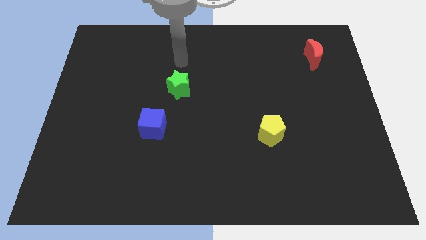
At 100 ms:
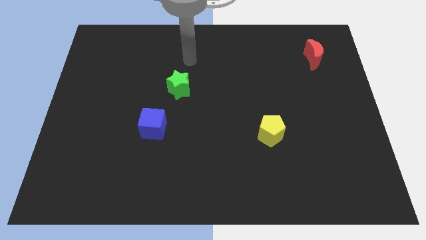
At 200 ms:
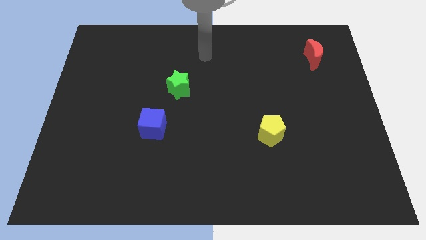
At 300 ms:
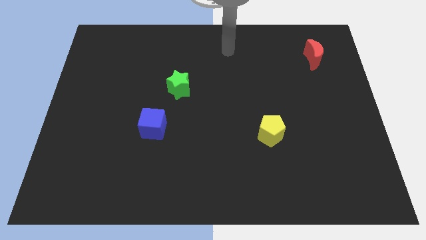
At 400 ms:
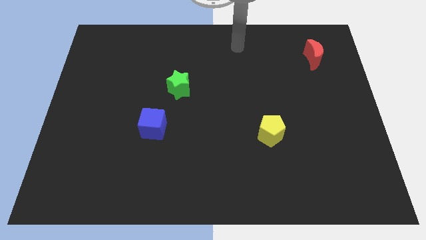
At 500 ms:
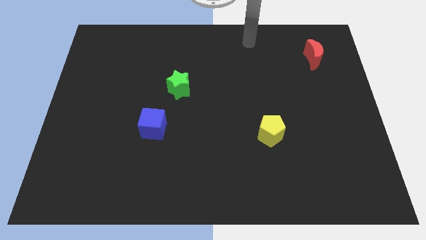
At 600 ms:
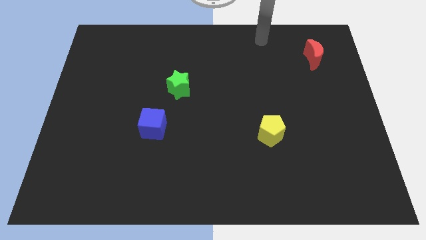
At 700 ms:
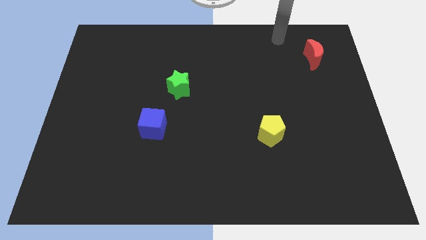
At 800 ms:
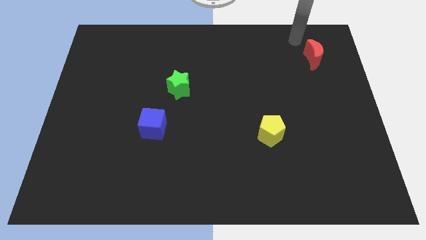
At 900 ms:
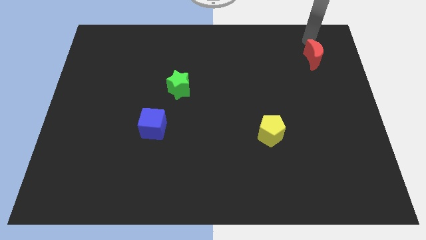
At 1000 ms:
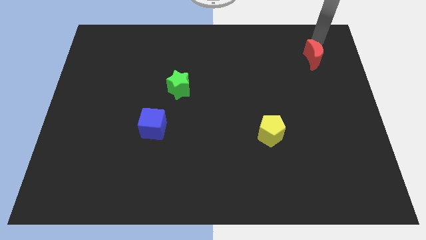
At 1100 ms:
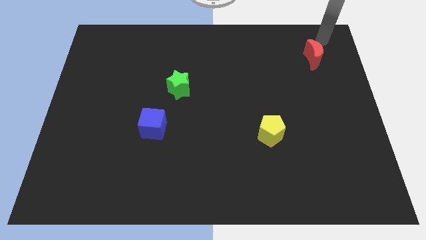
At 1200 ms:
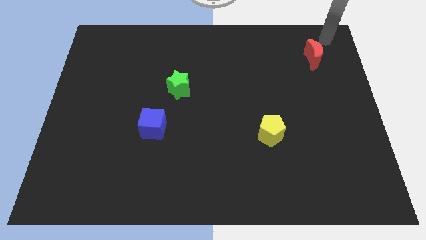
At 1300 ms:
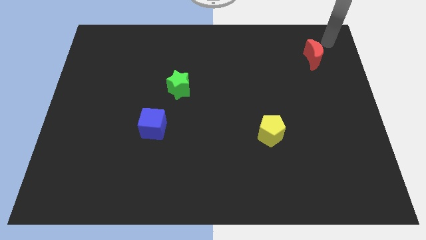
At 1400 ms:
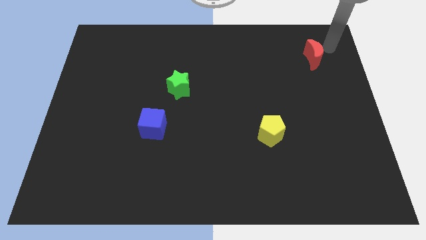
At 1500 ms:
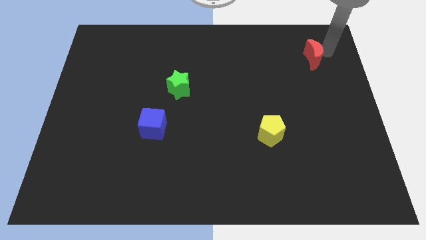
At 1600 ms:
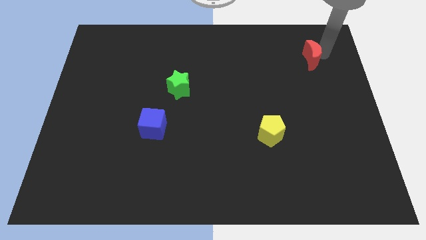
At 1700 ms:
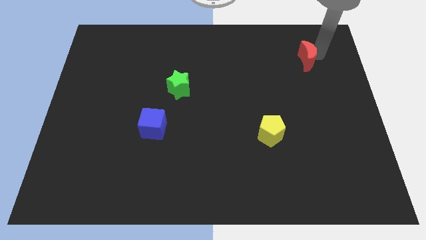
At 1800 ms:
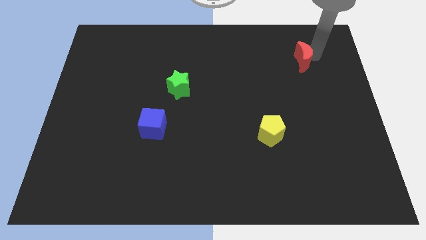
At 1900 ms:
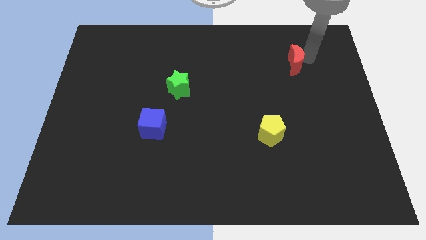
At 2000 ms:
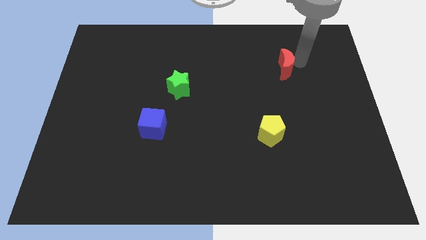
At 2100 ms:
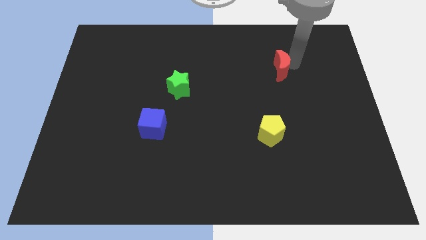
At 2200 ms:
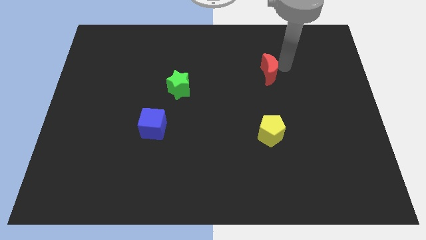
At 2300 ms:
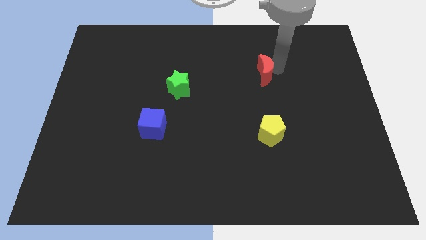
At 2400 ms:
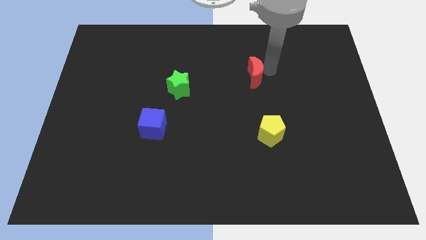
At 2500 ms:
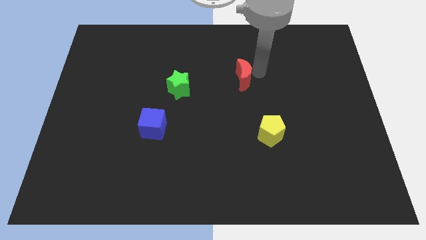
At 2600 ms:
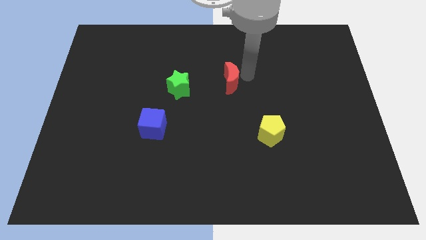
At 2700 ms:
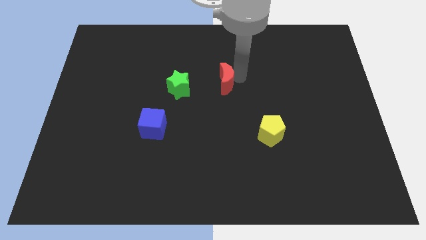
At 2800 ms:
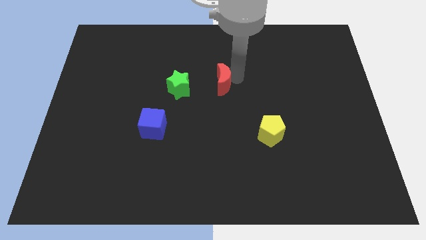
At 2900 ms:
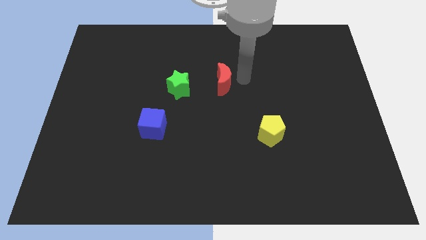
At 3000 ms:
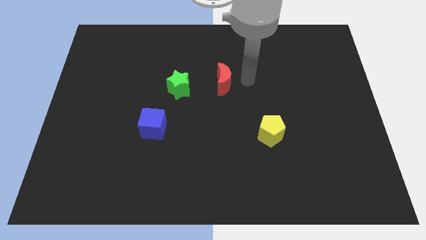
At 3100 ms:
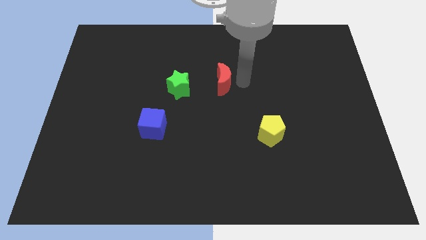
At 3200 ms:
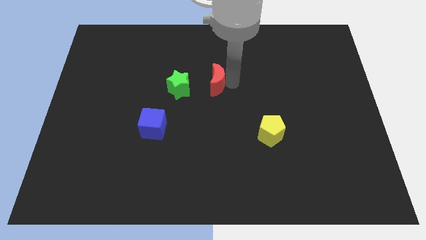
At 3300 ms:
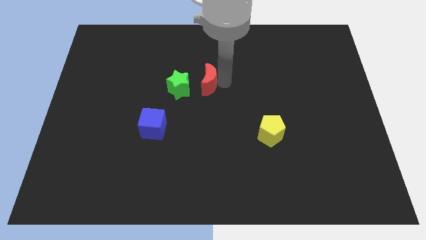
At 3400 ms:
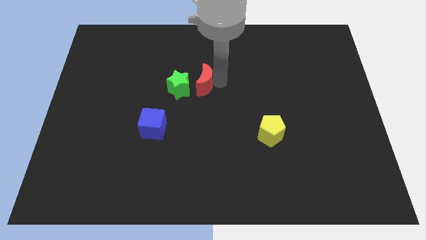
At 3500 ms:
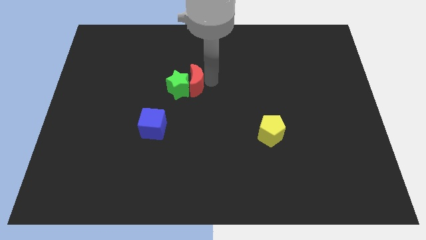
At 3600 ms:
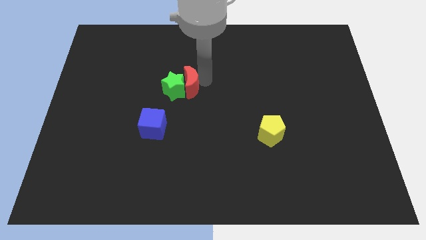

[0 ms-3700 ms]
put the moon towards the green block

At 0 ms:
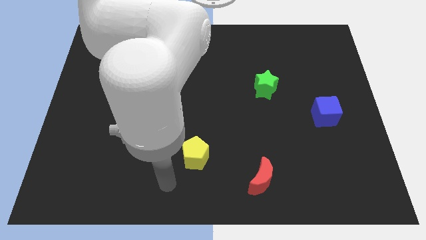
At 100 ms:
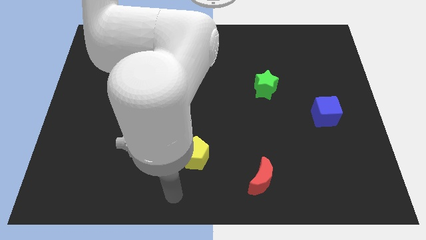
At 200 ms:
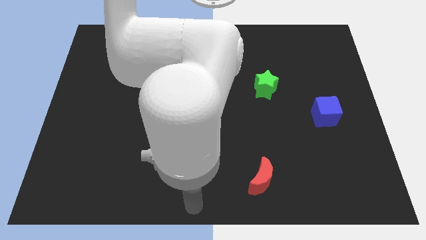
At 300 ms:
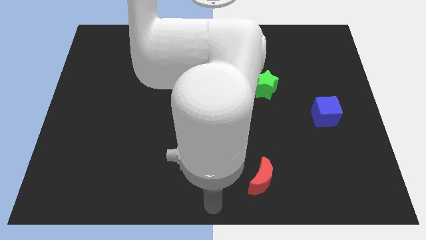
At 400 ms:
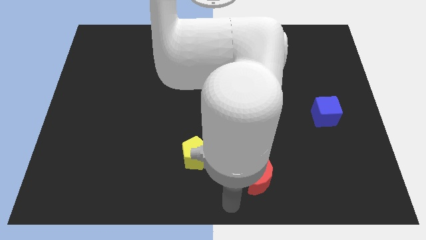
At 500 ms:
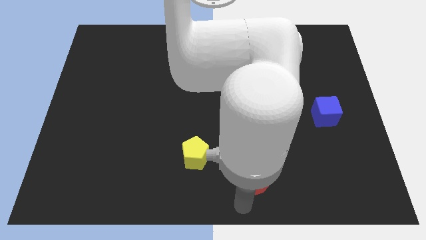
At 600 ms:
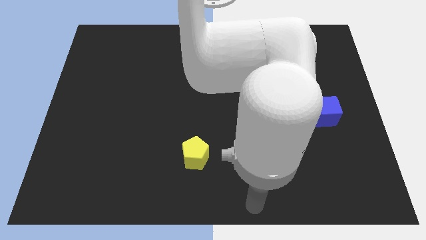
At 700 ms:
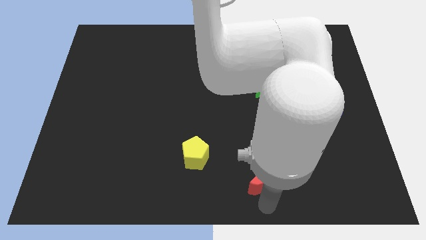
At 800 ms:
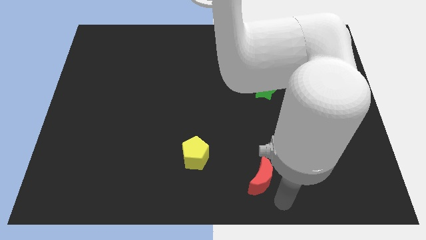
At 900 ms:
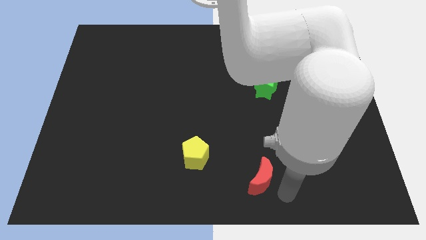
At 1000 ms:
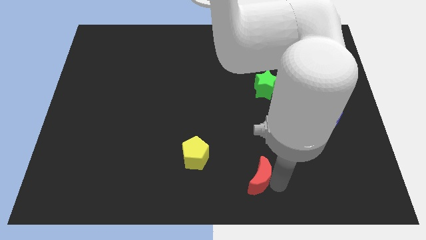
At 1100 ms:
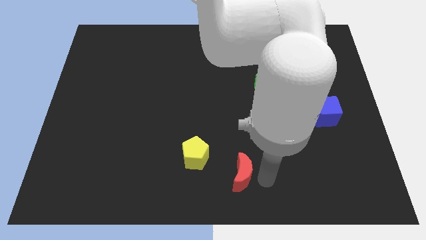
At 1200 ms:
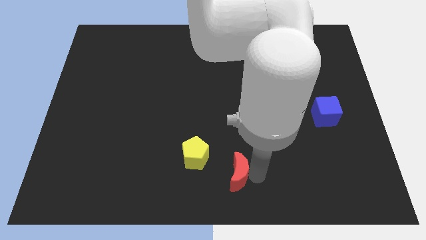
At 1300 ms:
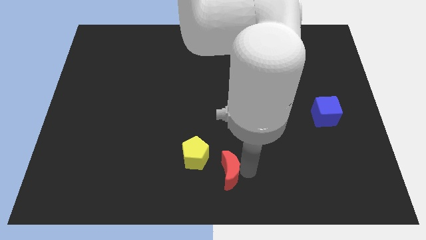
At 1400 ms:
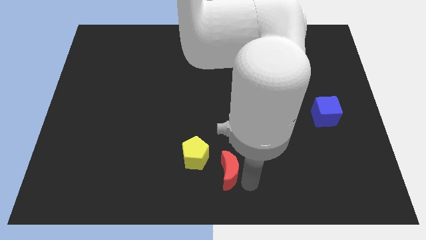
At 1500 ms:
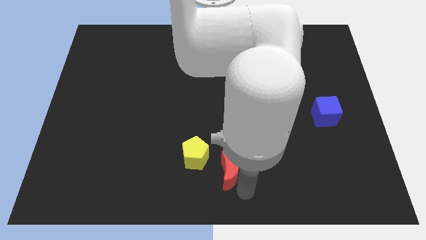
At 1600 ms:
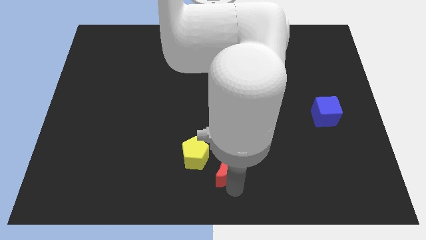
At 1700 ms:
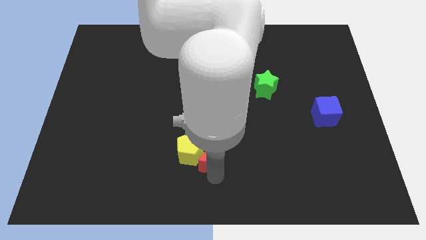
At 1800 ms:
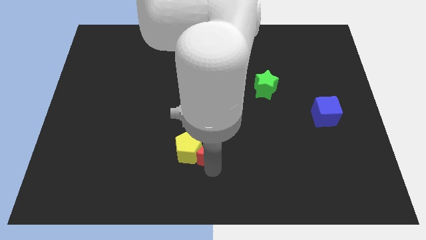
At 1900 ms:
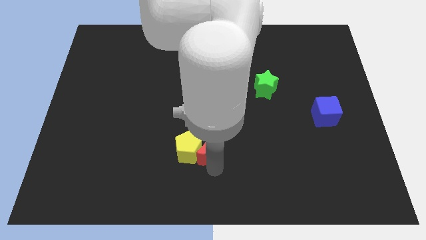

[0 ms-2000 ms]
push the red block towards the yellow pentagon

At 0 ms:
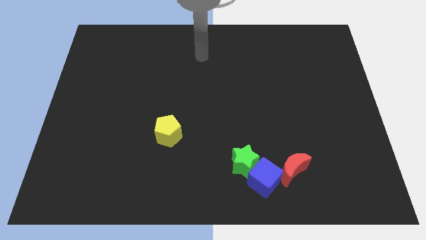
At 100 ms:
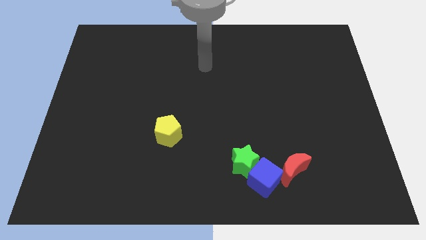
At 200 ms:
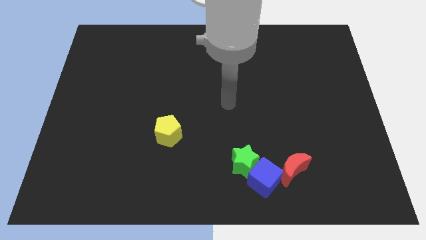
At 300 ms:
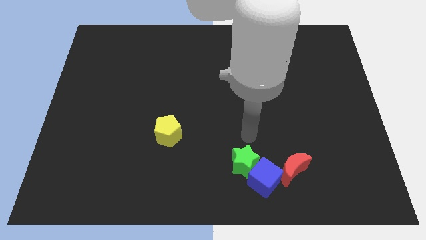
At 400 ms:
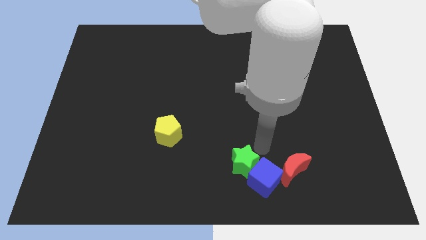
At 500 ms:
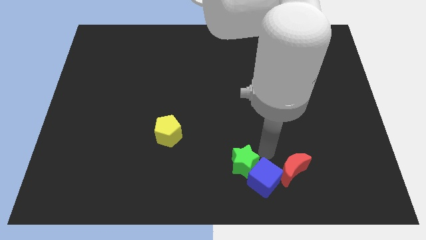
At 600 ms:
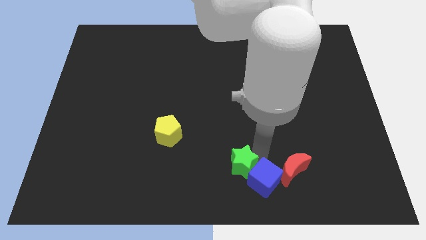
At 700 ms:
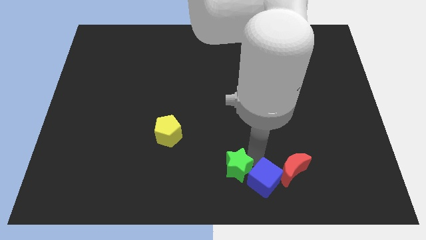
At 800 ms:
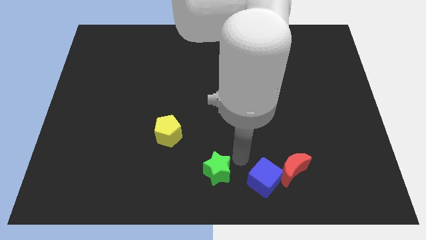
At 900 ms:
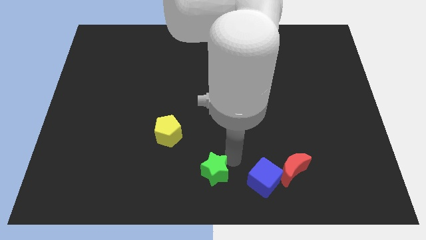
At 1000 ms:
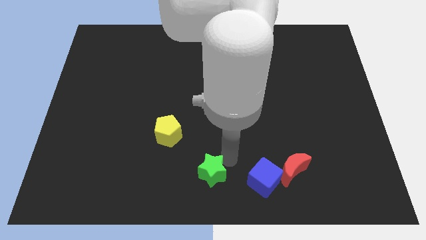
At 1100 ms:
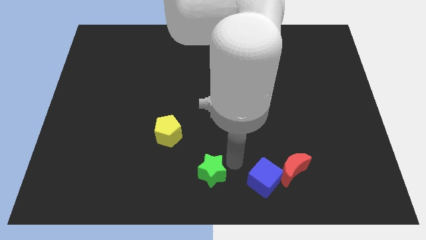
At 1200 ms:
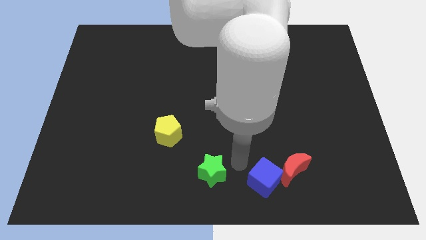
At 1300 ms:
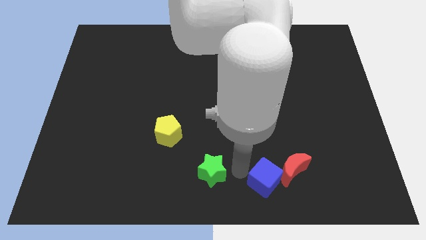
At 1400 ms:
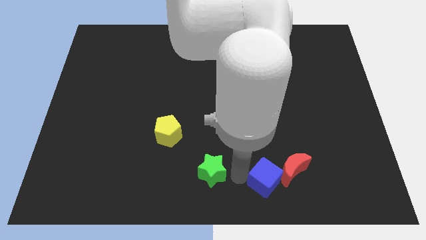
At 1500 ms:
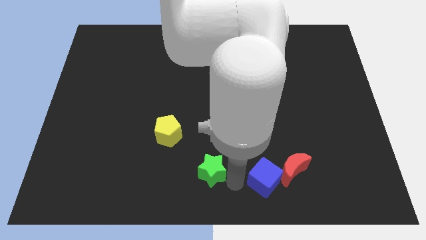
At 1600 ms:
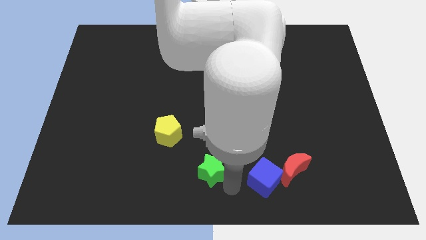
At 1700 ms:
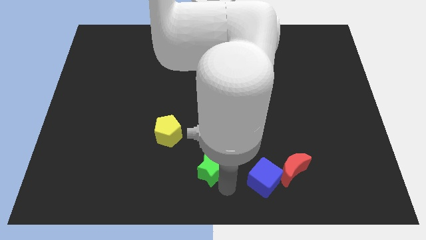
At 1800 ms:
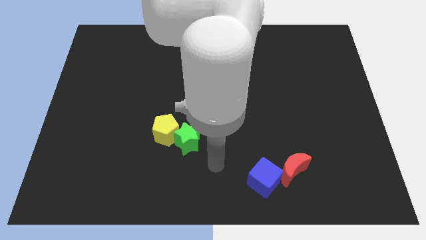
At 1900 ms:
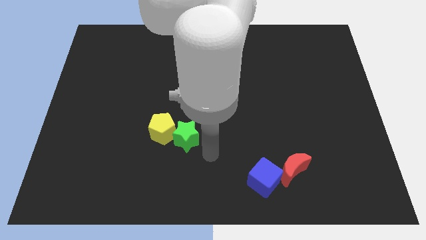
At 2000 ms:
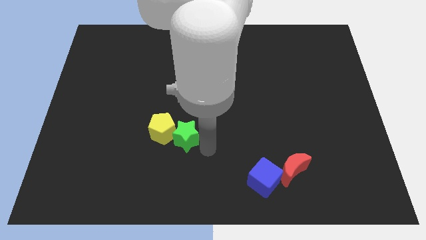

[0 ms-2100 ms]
move the star close to the pentagon

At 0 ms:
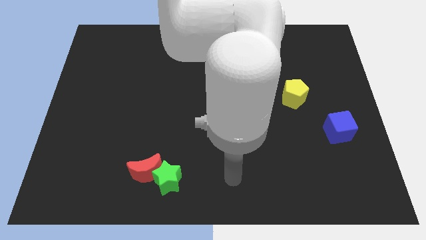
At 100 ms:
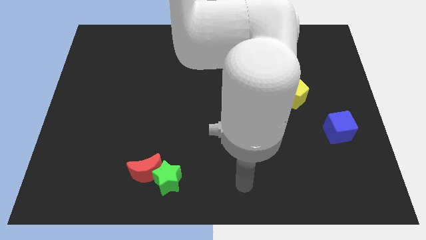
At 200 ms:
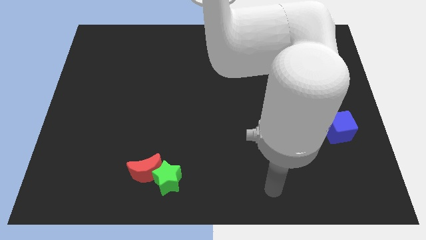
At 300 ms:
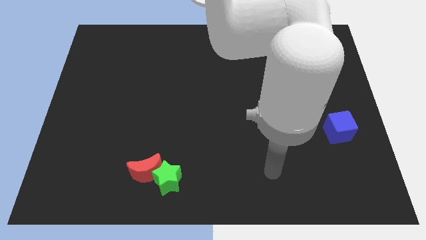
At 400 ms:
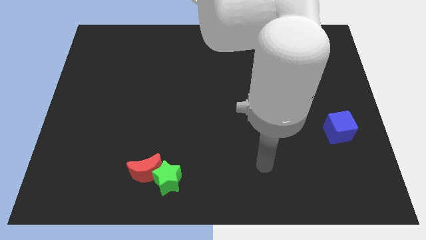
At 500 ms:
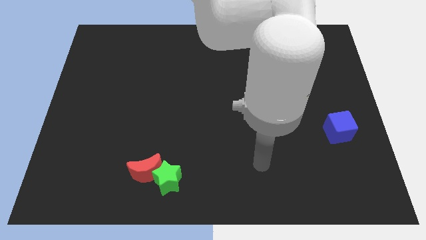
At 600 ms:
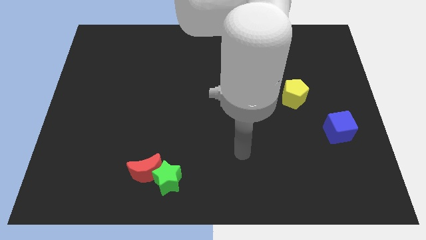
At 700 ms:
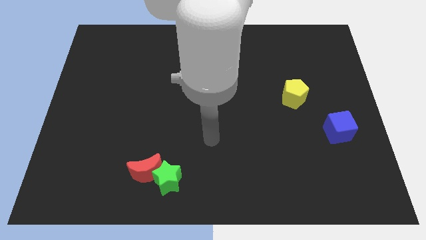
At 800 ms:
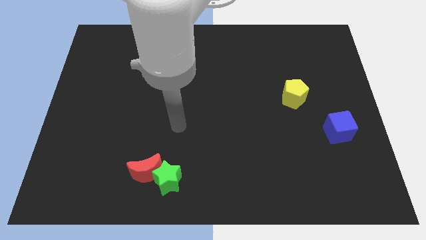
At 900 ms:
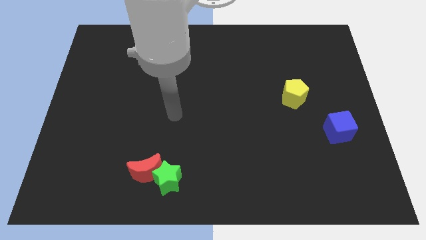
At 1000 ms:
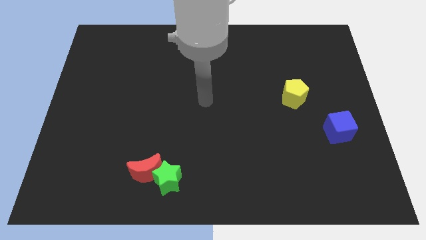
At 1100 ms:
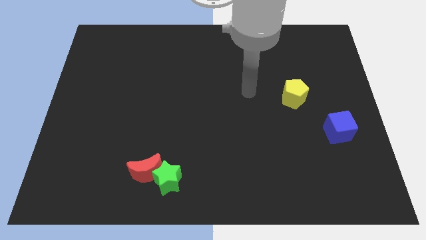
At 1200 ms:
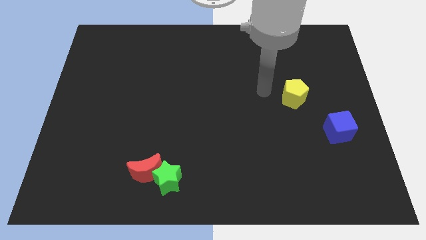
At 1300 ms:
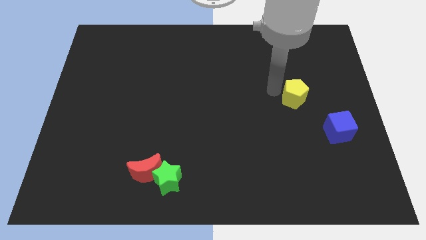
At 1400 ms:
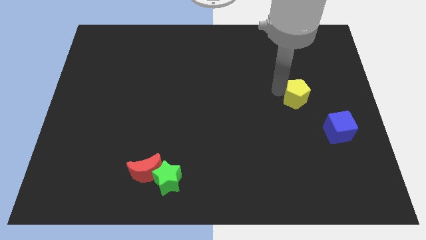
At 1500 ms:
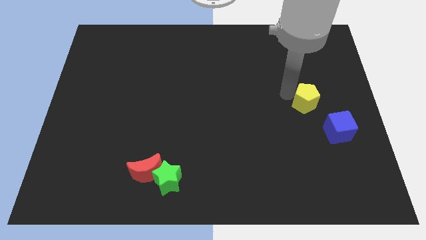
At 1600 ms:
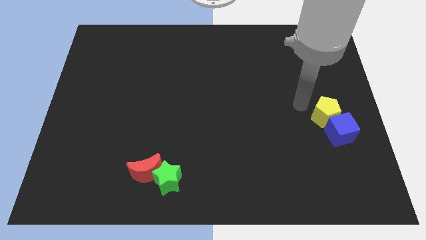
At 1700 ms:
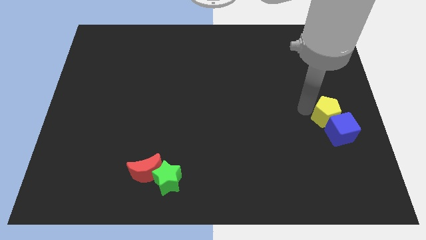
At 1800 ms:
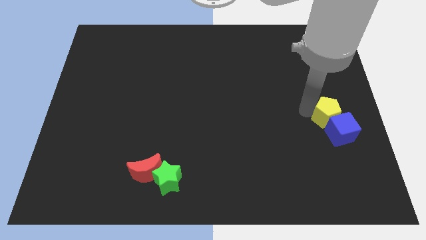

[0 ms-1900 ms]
put the yellow block towards the cube
